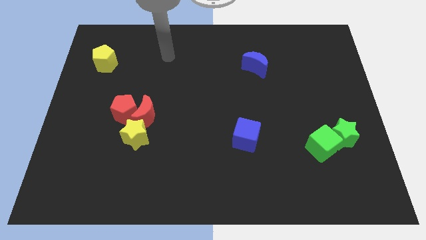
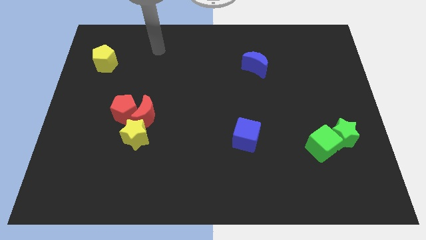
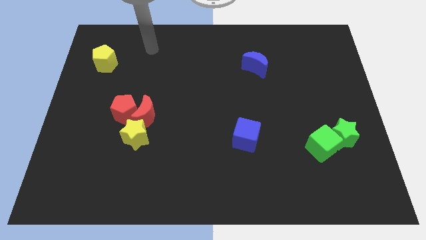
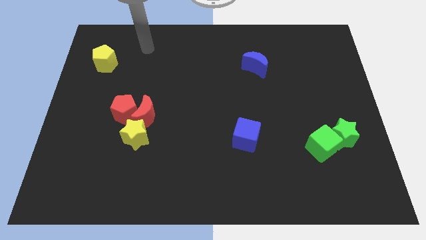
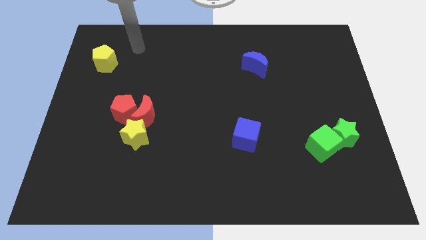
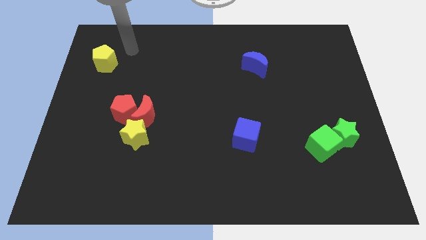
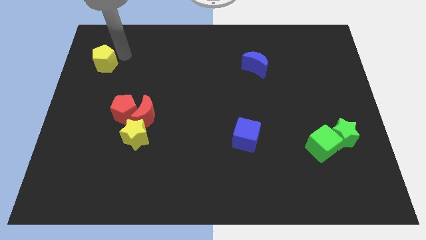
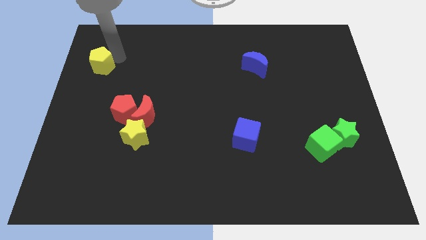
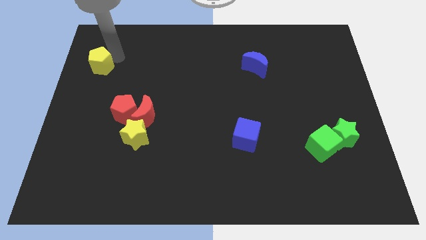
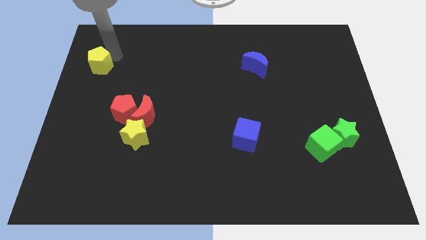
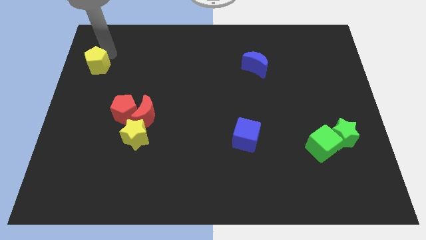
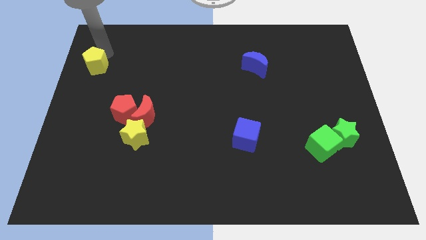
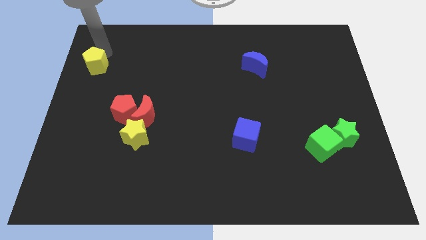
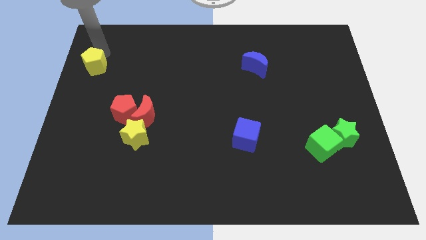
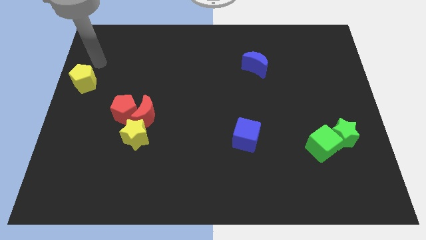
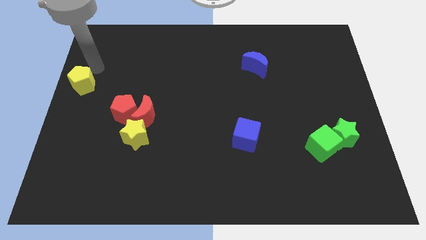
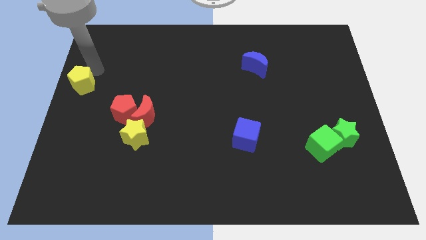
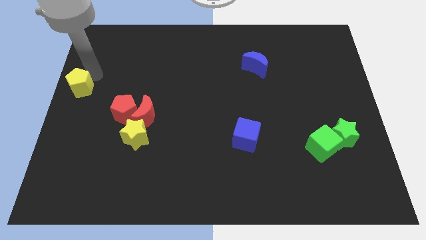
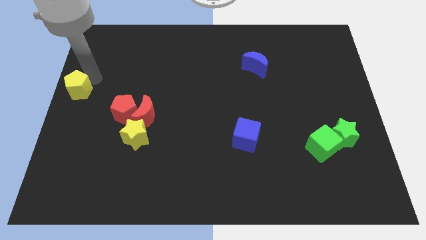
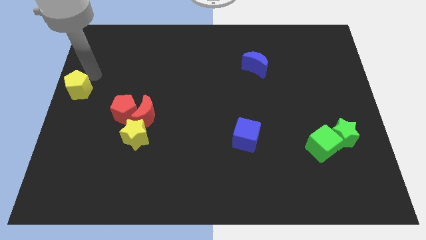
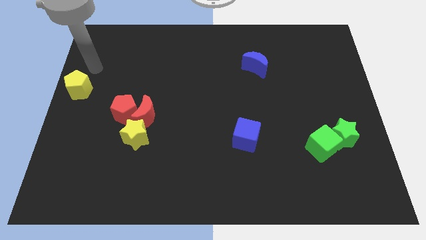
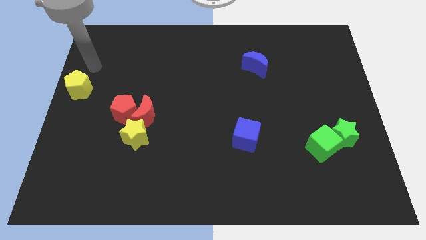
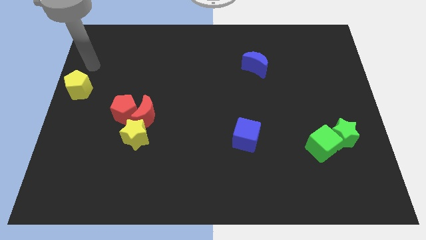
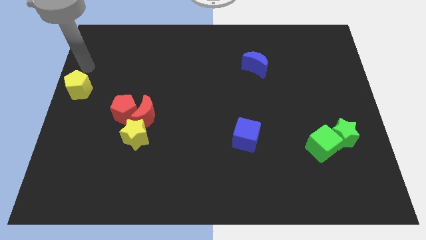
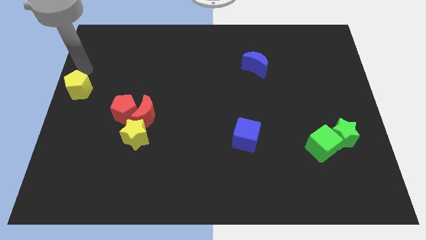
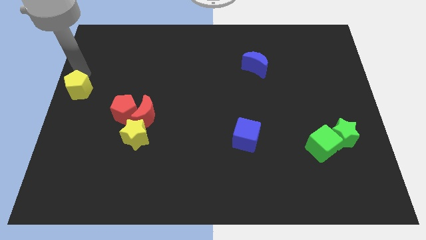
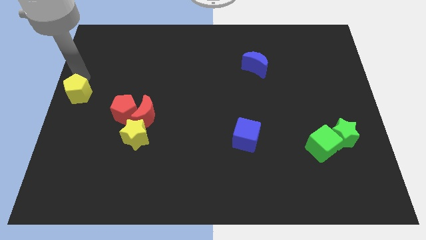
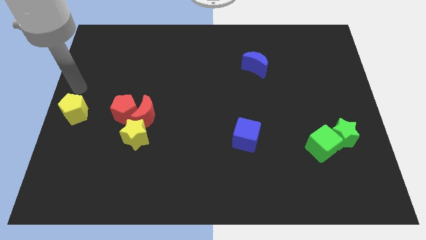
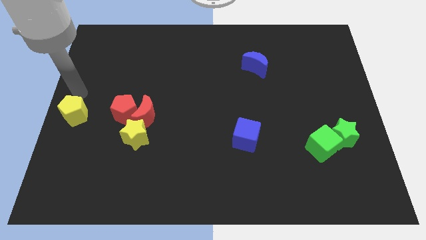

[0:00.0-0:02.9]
place the yellow pentagon to the left of red pentagon

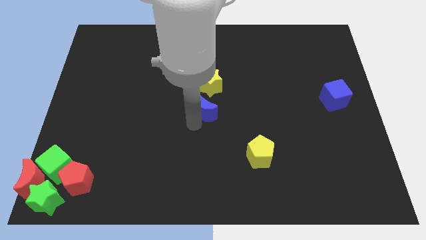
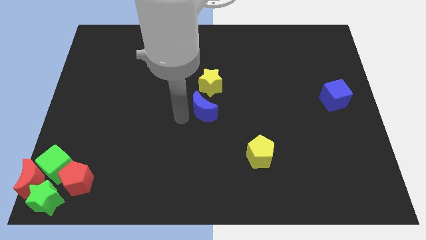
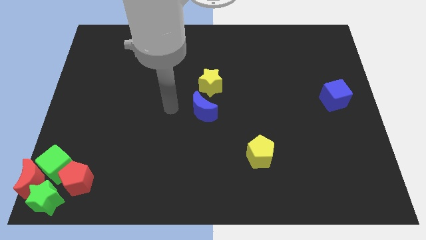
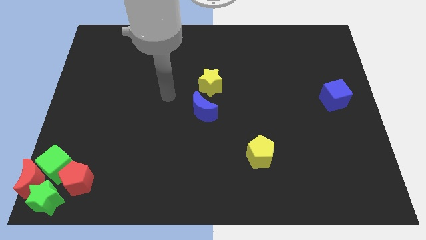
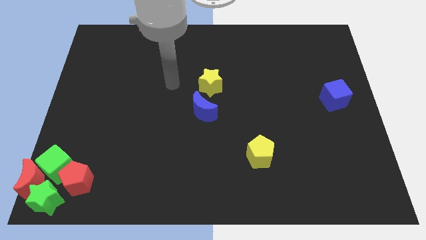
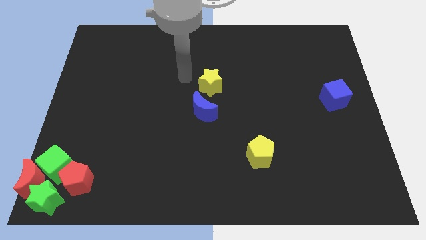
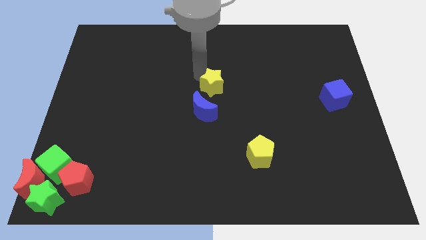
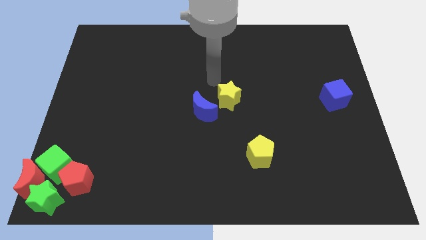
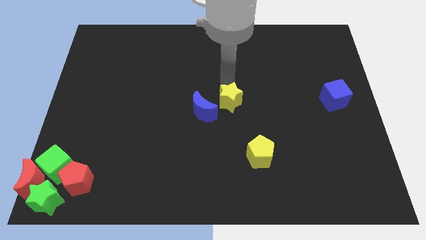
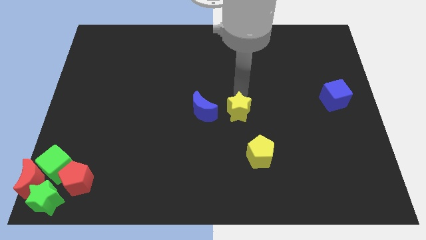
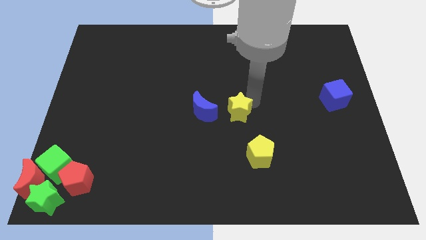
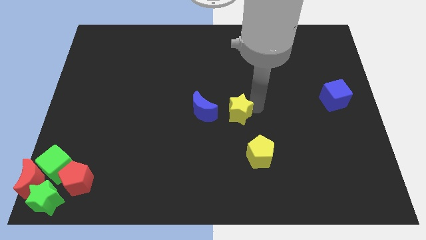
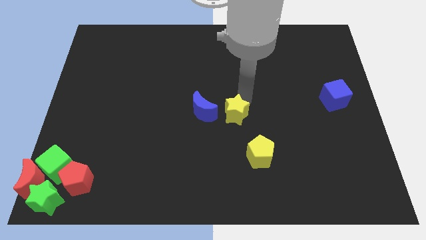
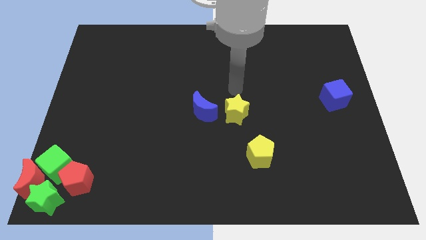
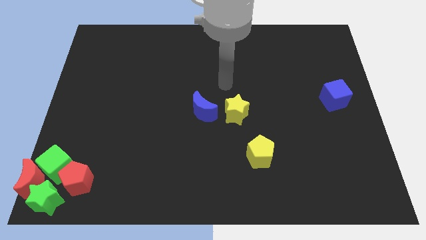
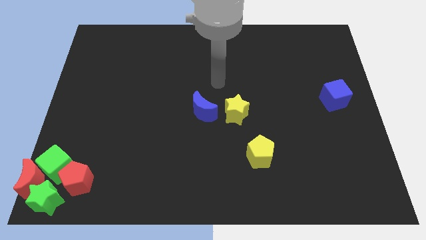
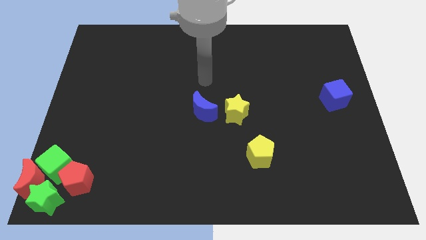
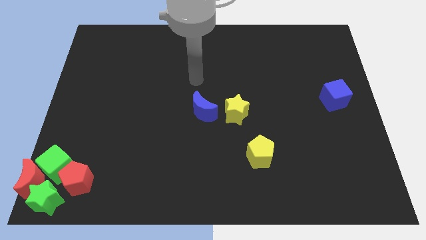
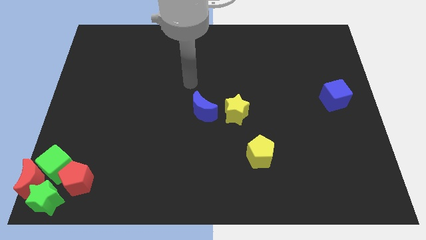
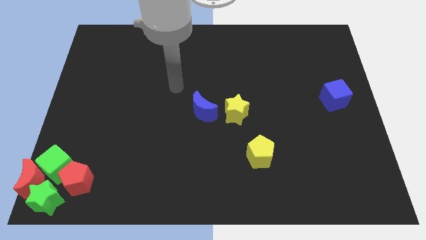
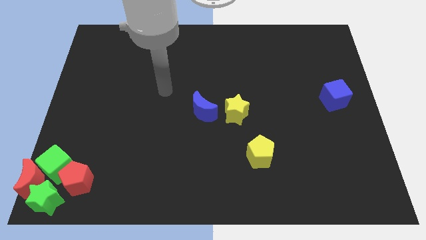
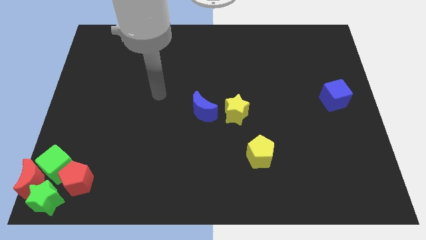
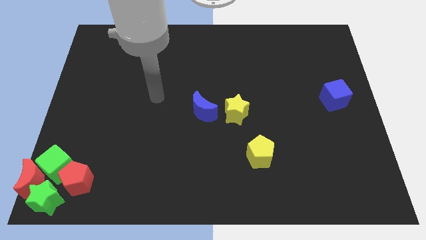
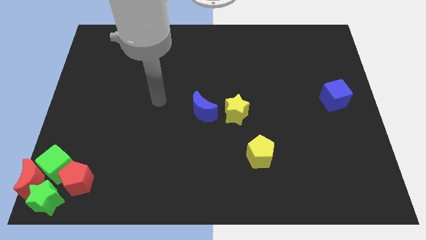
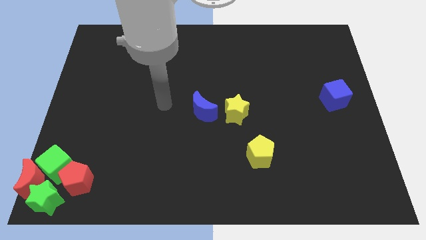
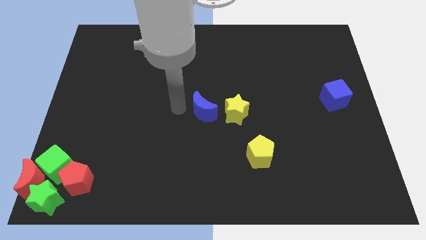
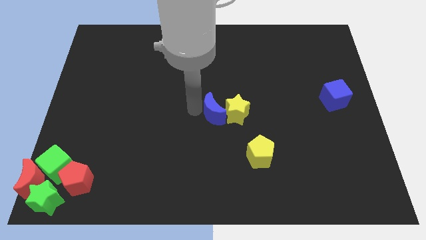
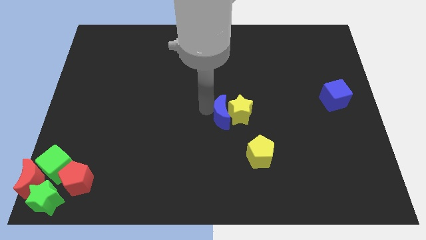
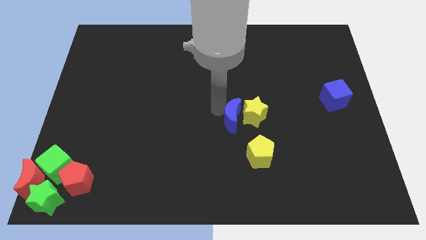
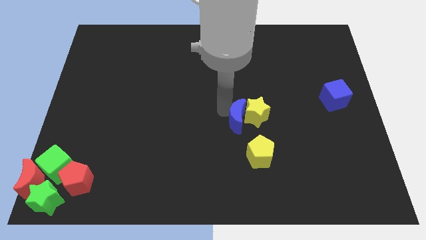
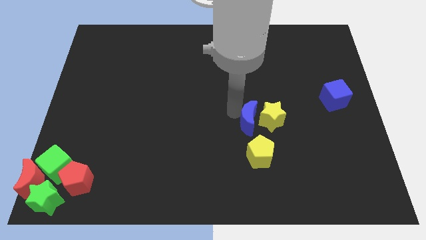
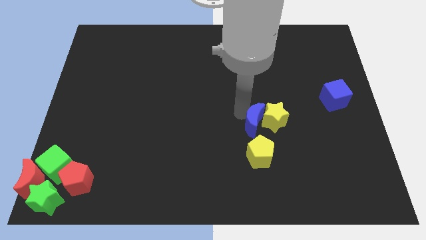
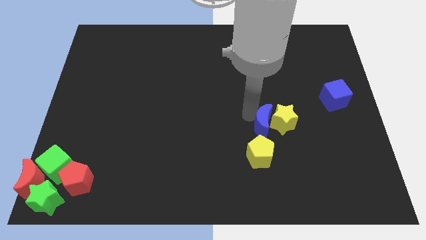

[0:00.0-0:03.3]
move the yellow star and blue moon to the top side of the yellow pentagon

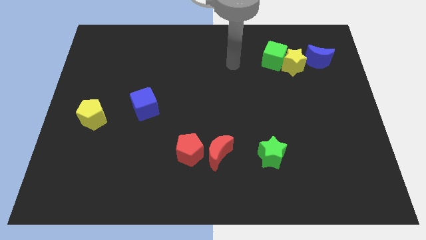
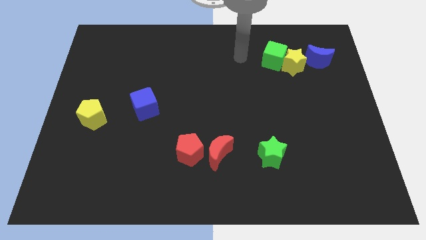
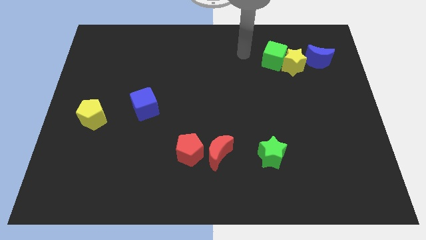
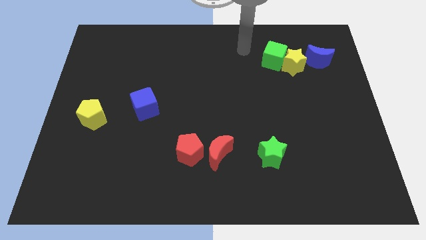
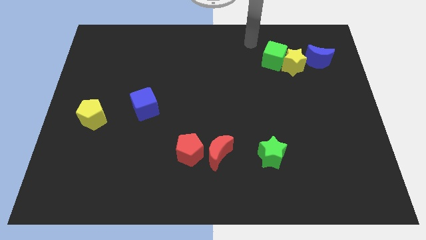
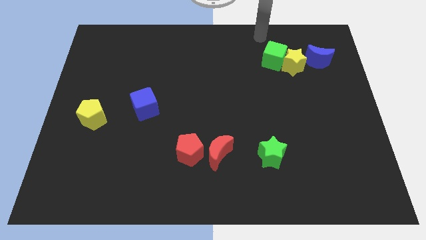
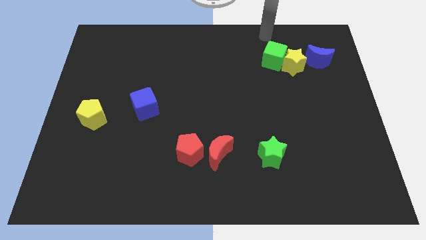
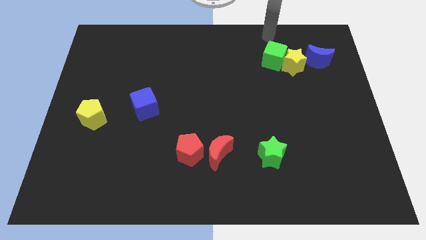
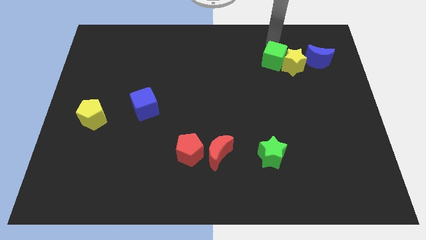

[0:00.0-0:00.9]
place arm above green cube

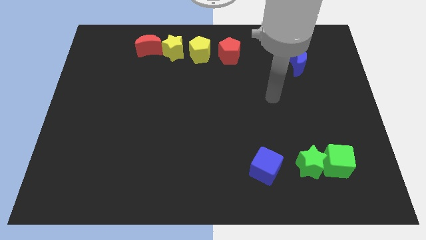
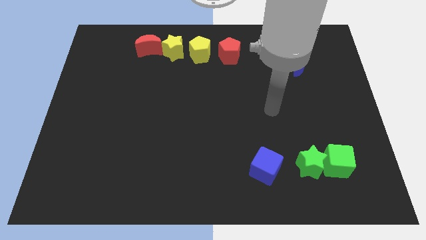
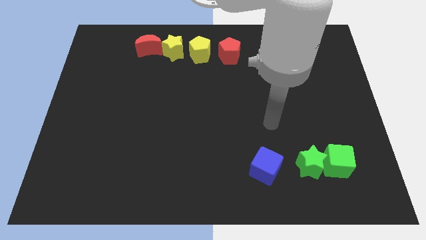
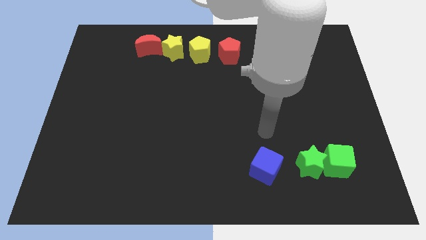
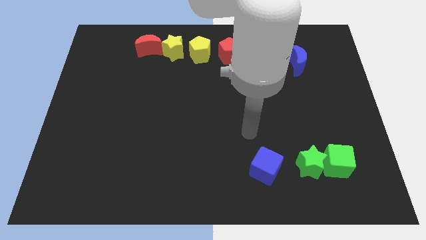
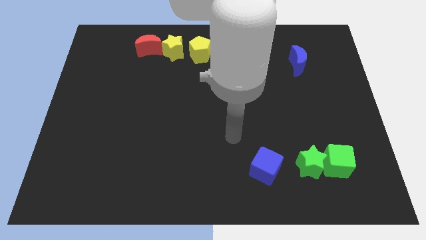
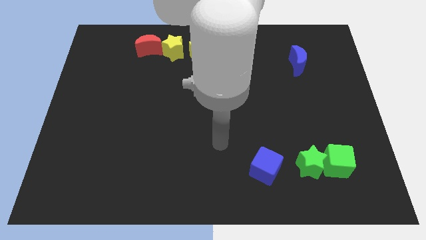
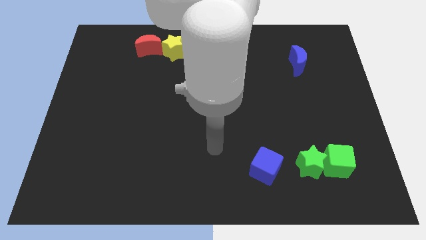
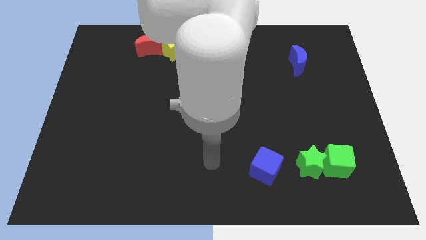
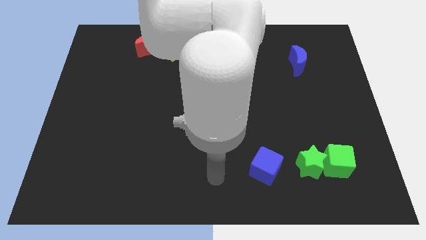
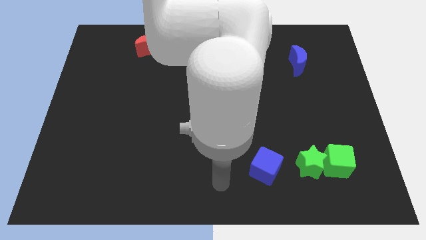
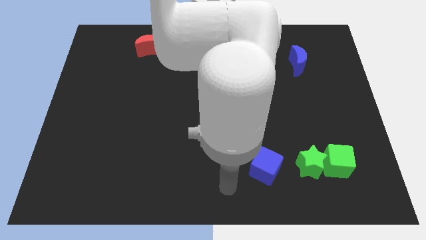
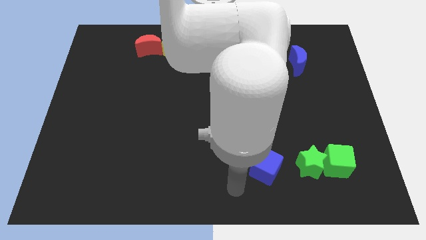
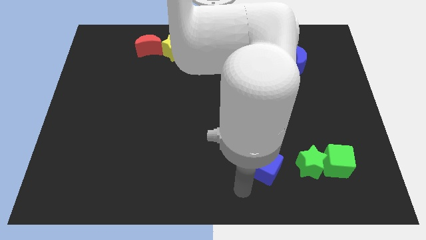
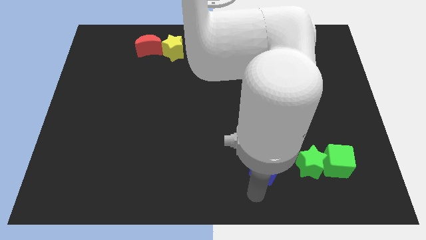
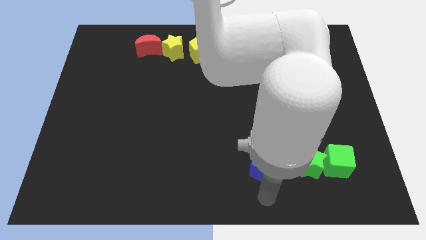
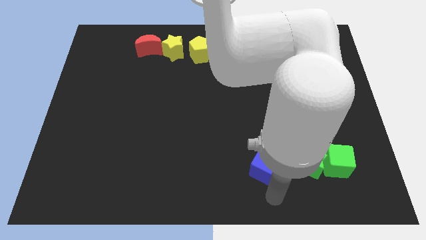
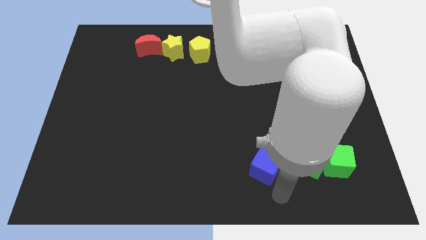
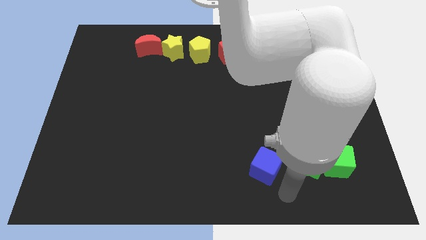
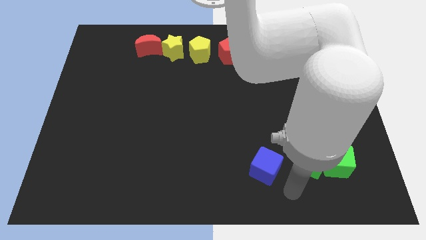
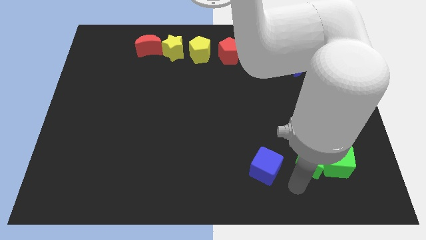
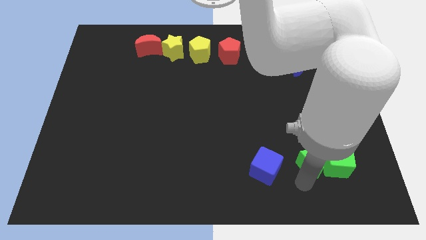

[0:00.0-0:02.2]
place your arm at the bottom of the green star
